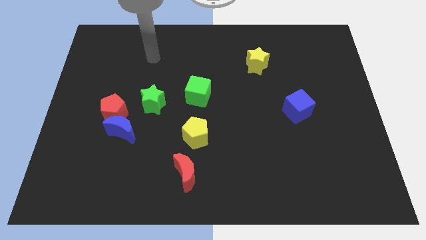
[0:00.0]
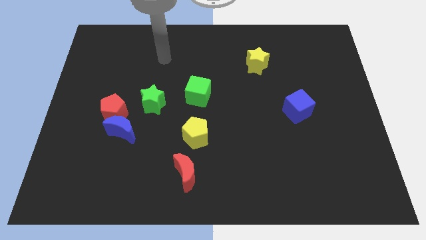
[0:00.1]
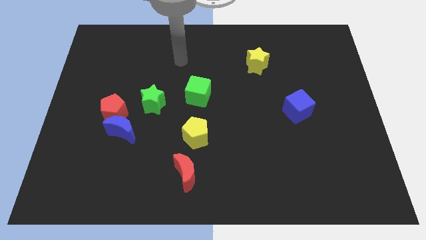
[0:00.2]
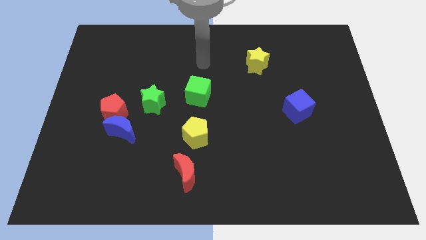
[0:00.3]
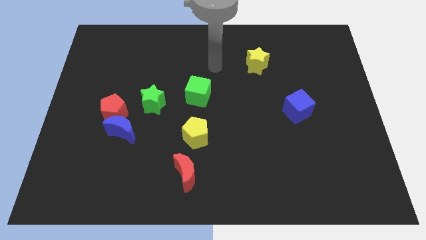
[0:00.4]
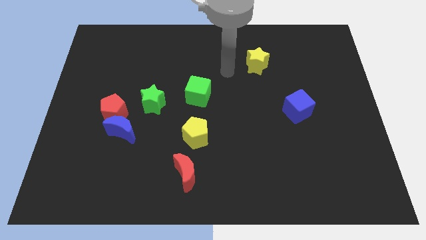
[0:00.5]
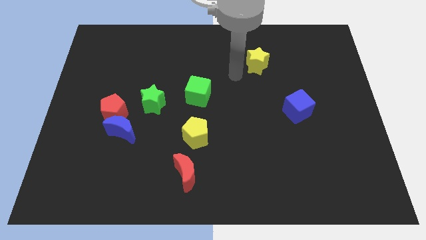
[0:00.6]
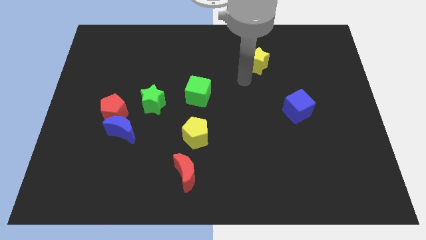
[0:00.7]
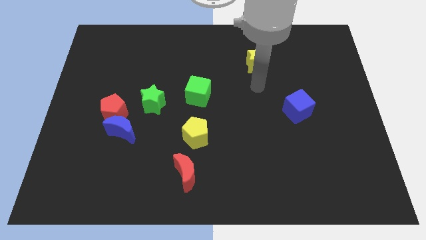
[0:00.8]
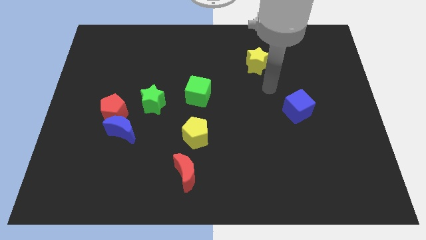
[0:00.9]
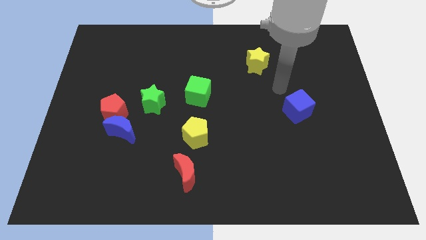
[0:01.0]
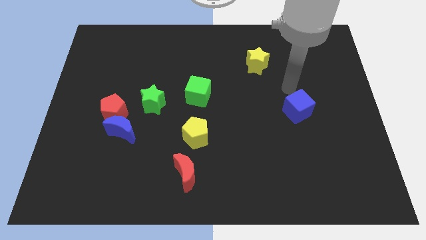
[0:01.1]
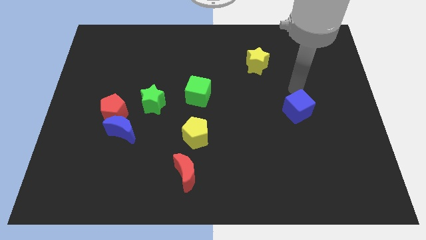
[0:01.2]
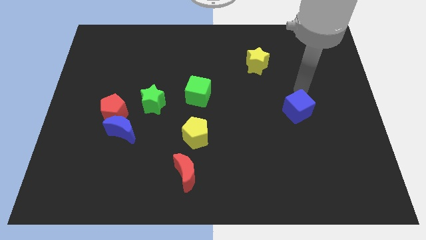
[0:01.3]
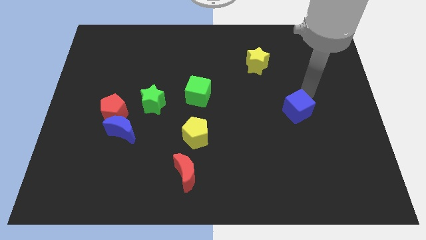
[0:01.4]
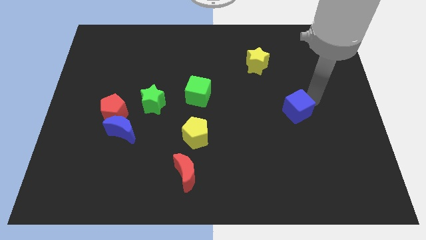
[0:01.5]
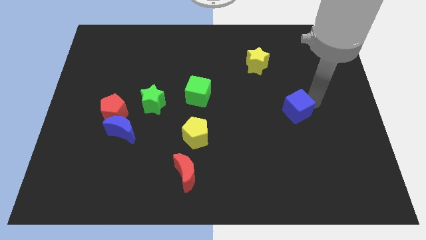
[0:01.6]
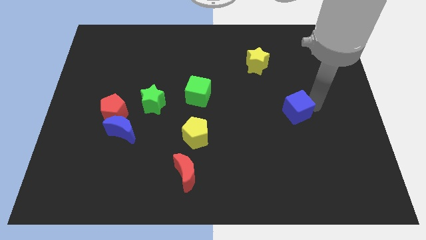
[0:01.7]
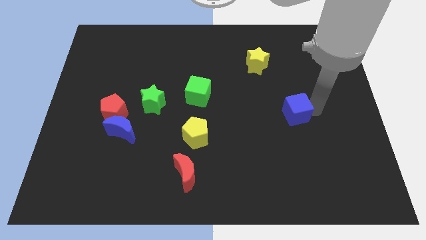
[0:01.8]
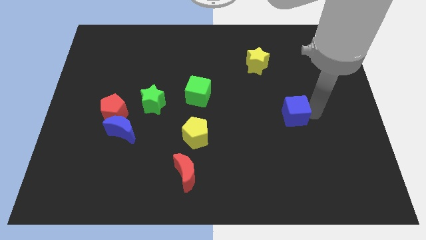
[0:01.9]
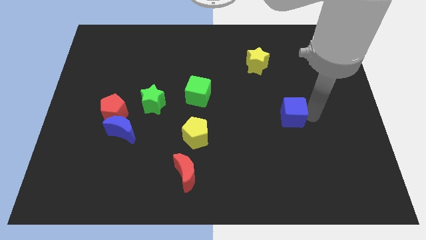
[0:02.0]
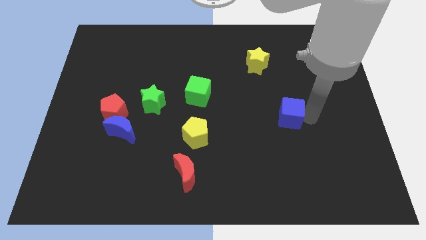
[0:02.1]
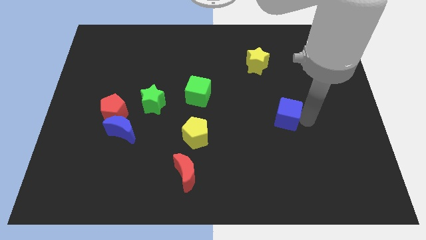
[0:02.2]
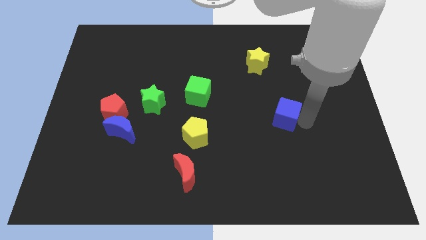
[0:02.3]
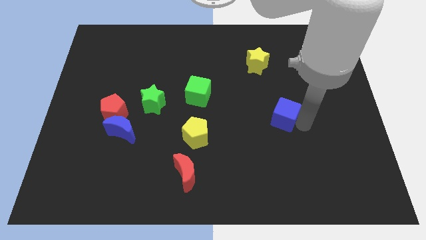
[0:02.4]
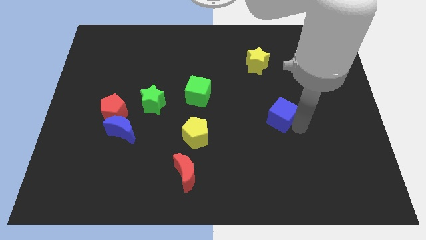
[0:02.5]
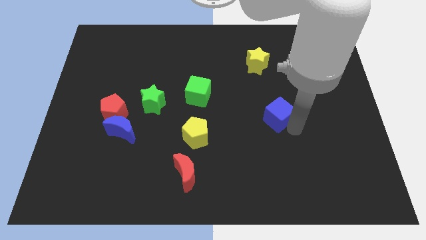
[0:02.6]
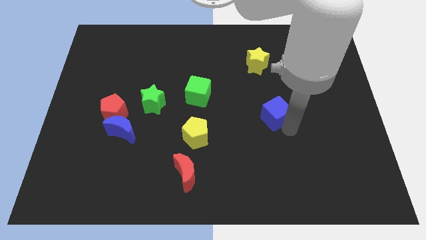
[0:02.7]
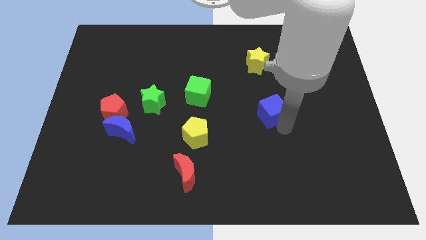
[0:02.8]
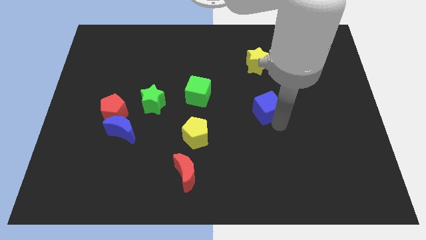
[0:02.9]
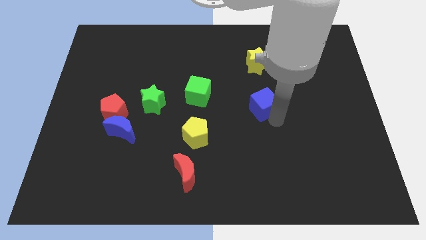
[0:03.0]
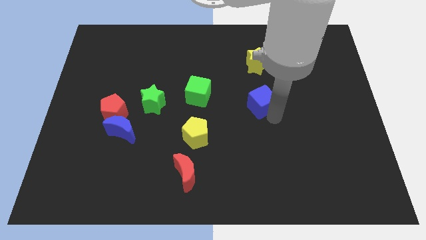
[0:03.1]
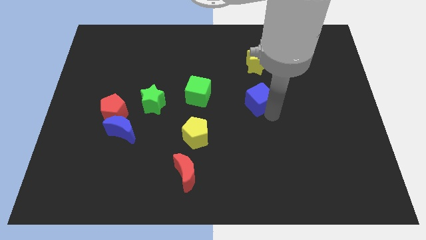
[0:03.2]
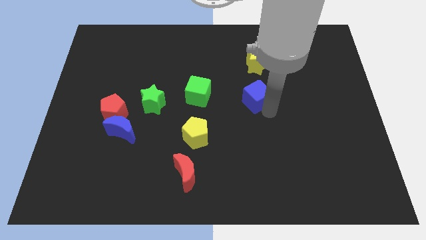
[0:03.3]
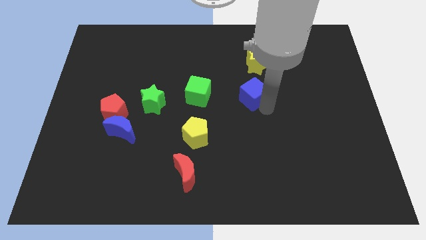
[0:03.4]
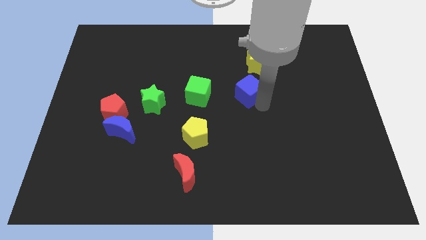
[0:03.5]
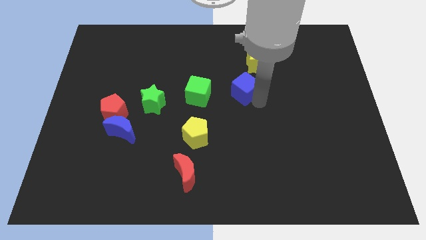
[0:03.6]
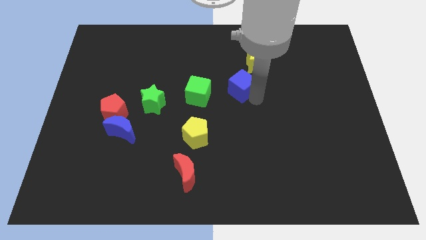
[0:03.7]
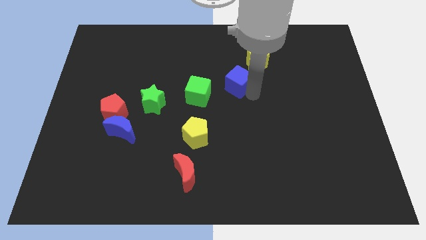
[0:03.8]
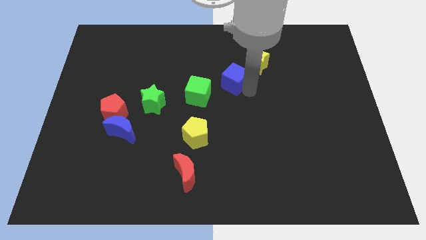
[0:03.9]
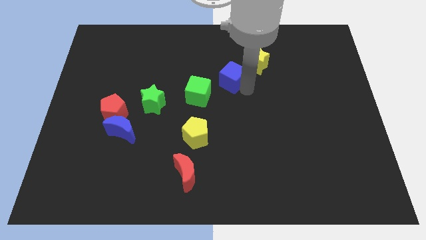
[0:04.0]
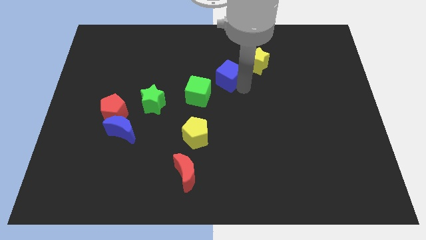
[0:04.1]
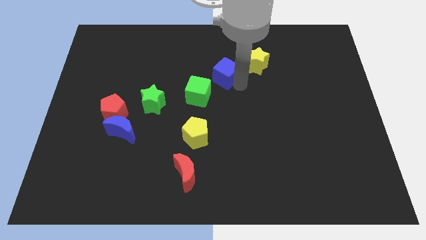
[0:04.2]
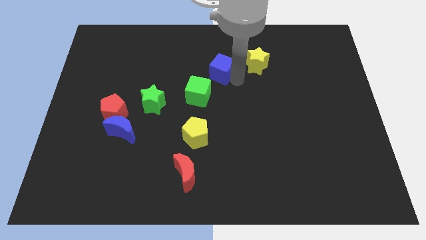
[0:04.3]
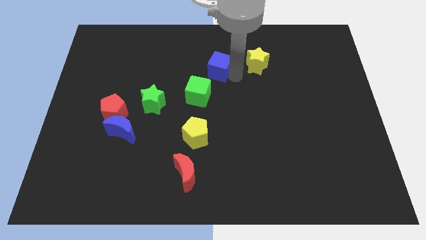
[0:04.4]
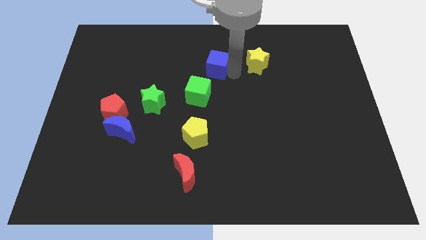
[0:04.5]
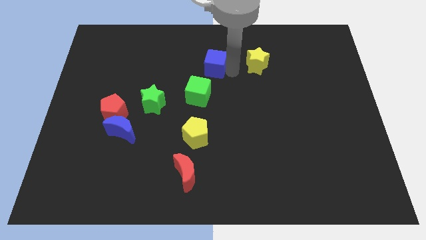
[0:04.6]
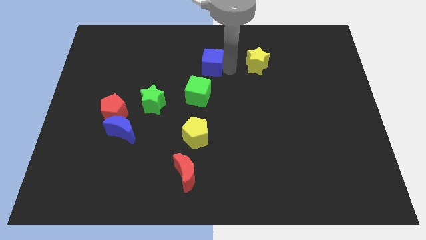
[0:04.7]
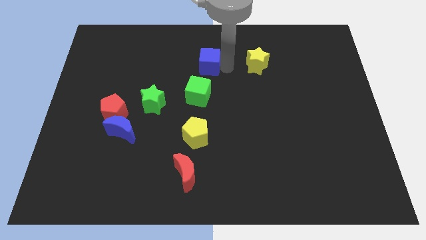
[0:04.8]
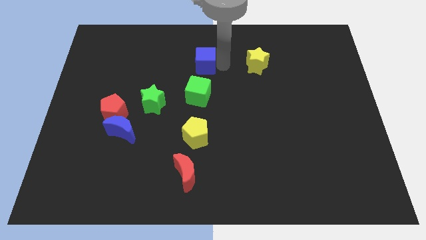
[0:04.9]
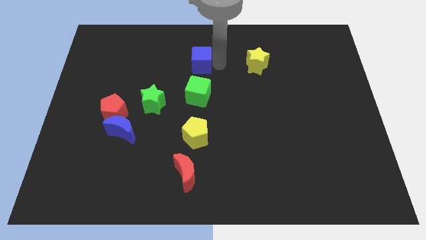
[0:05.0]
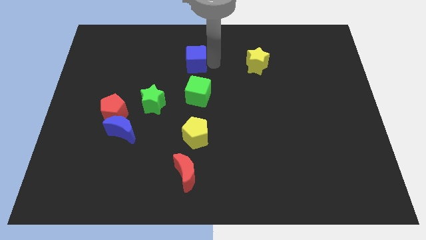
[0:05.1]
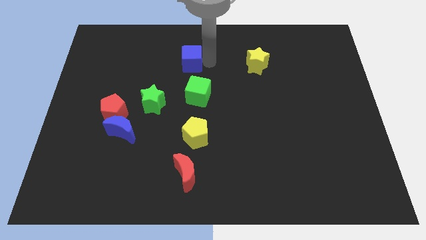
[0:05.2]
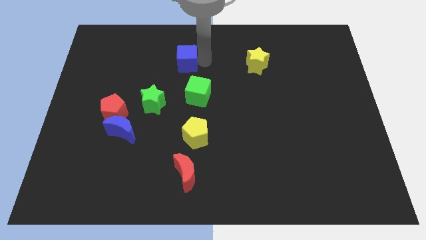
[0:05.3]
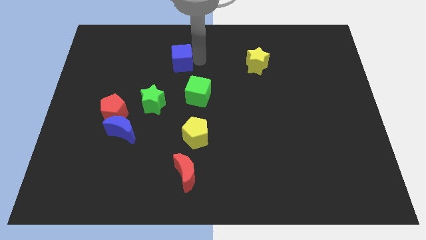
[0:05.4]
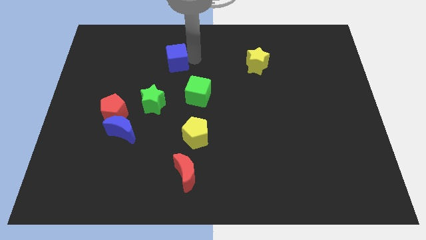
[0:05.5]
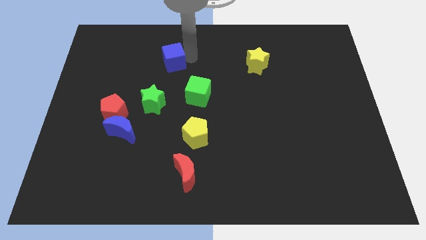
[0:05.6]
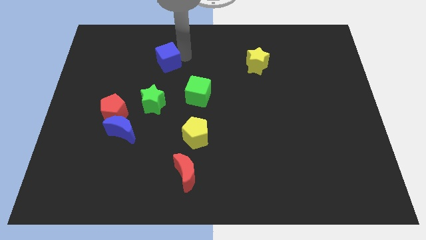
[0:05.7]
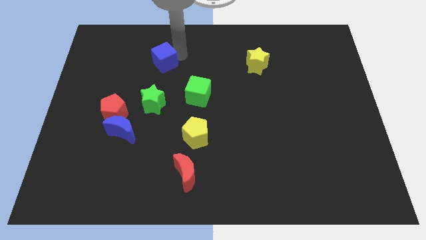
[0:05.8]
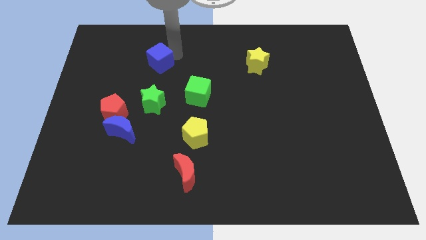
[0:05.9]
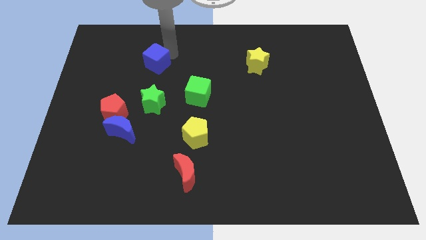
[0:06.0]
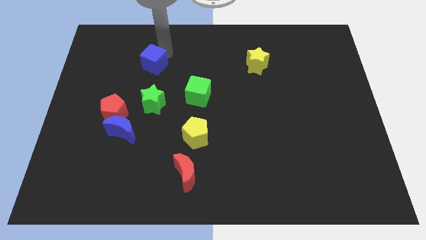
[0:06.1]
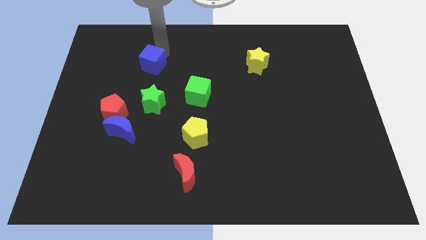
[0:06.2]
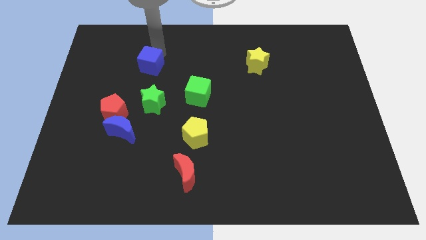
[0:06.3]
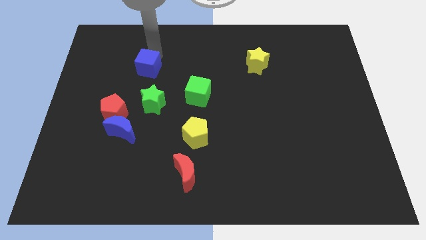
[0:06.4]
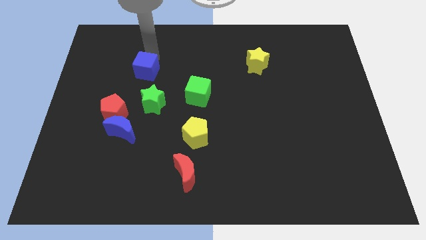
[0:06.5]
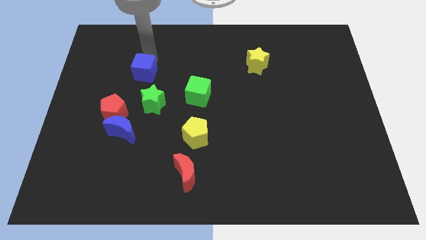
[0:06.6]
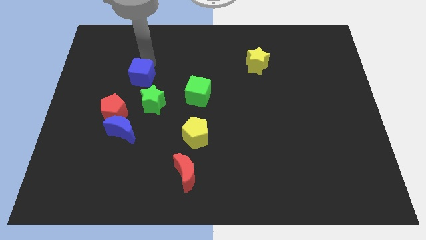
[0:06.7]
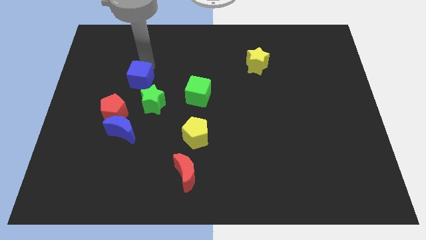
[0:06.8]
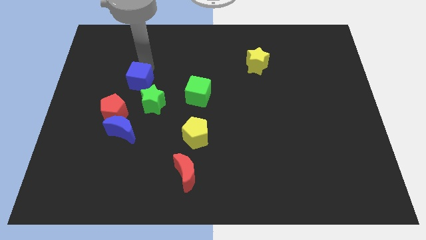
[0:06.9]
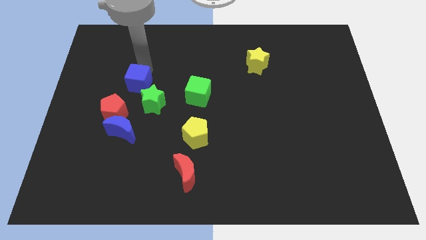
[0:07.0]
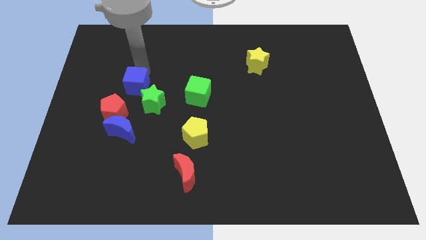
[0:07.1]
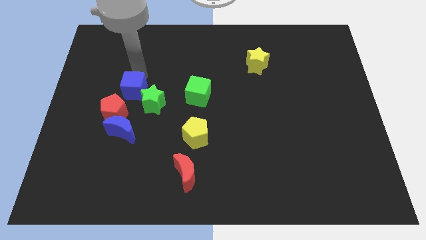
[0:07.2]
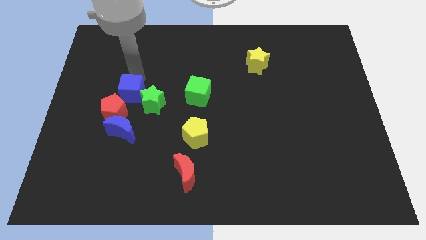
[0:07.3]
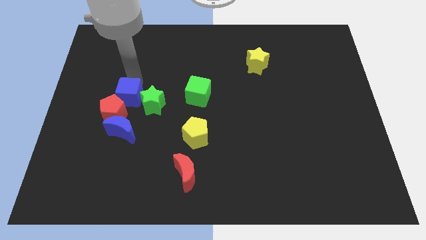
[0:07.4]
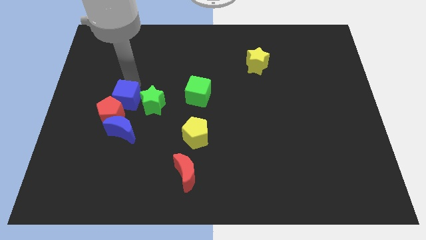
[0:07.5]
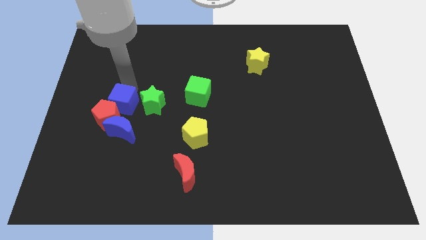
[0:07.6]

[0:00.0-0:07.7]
move the blue cube towards the red pentagon

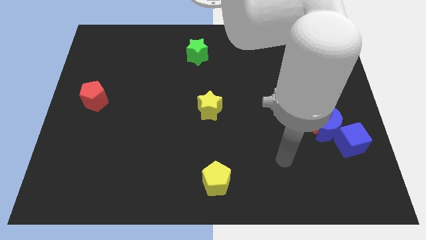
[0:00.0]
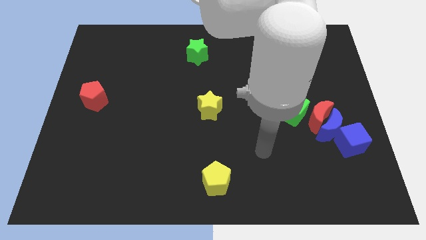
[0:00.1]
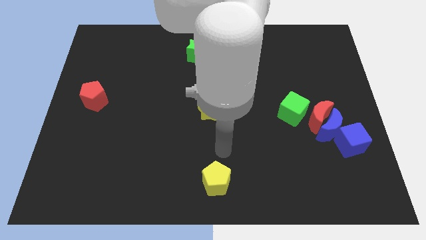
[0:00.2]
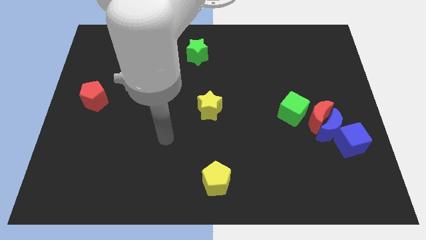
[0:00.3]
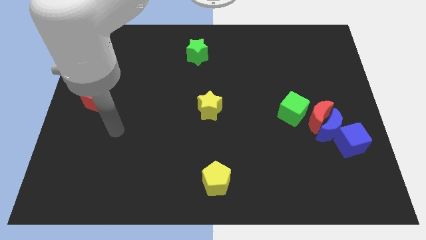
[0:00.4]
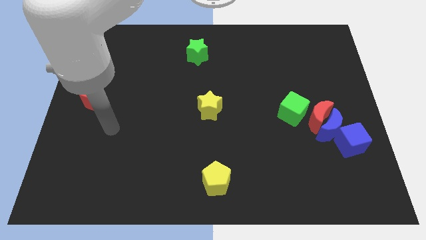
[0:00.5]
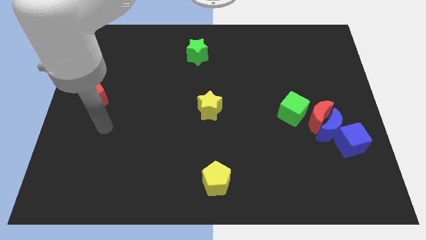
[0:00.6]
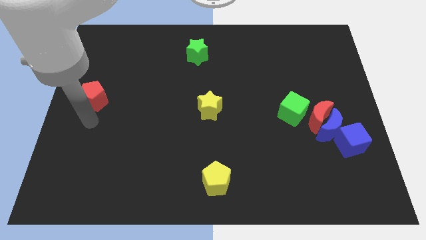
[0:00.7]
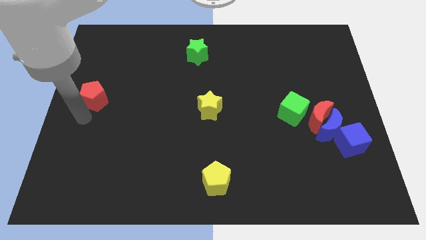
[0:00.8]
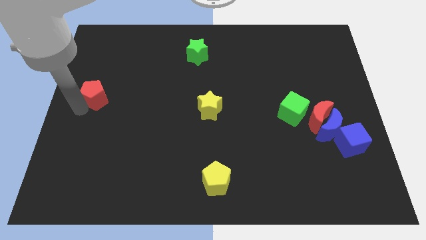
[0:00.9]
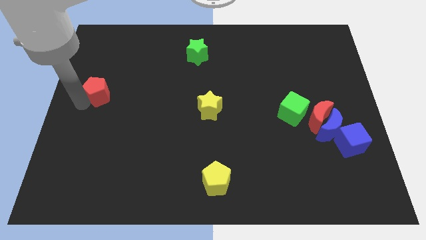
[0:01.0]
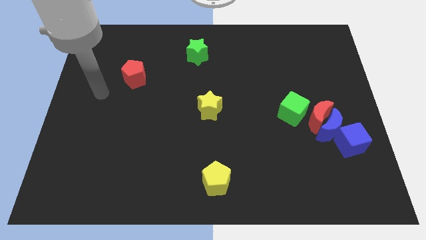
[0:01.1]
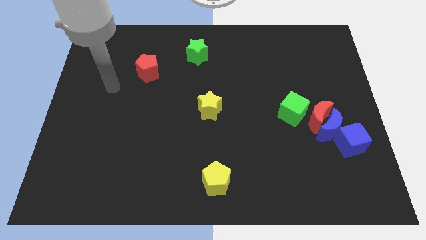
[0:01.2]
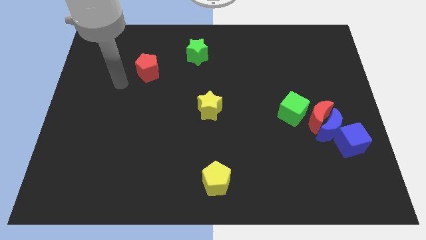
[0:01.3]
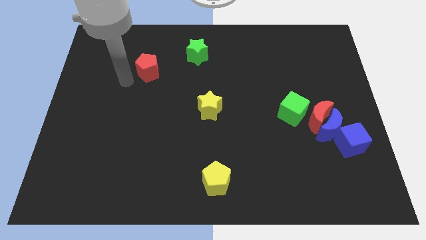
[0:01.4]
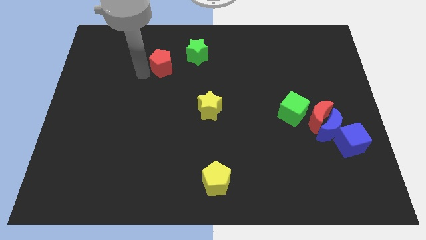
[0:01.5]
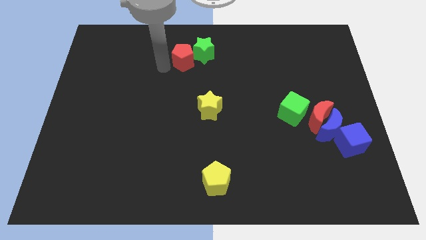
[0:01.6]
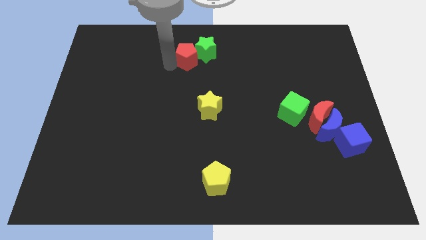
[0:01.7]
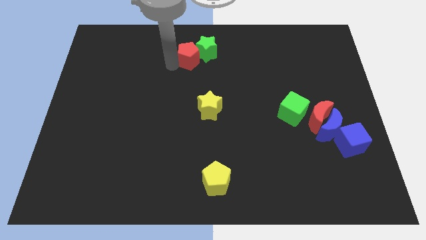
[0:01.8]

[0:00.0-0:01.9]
move the red pentagon close to the green star
